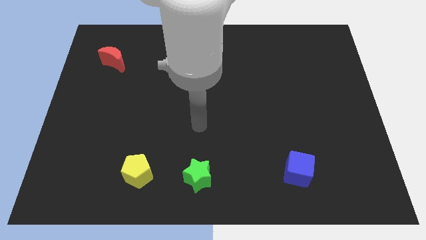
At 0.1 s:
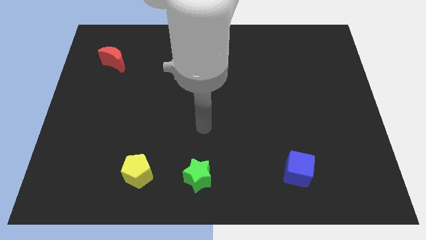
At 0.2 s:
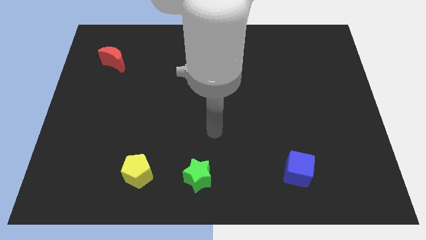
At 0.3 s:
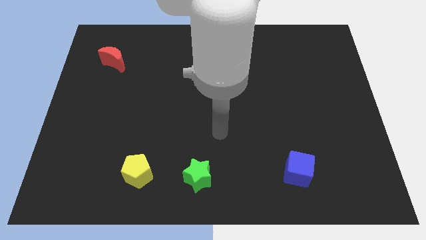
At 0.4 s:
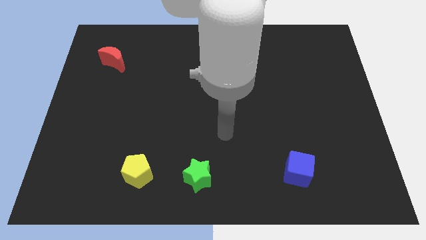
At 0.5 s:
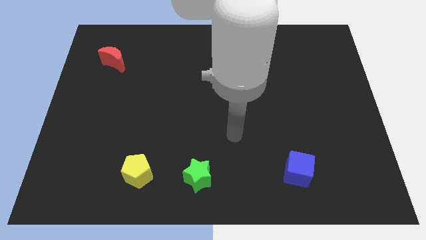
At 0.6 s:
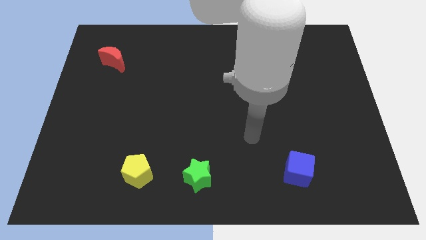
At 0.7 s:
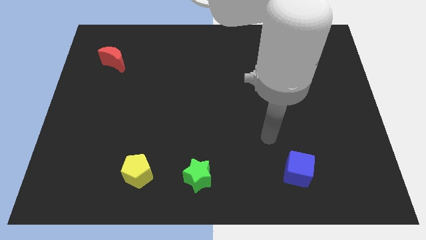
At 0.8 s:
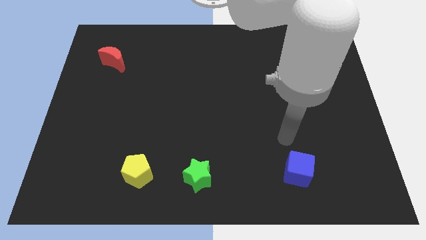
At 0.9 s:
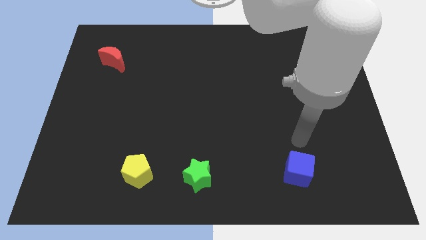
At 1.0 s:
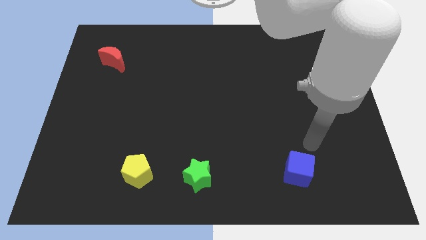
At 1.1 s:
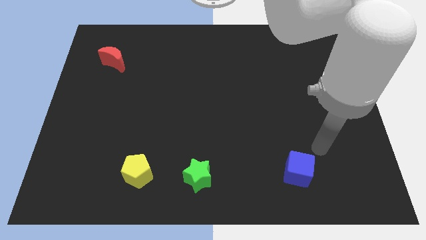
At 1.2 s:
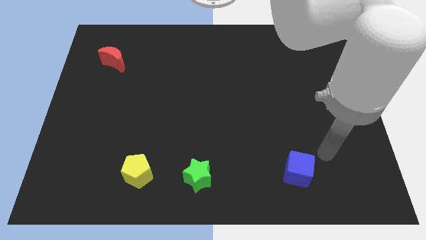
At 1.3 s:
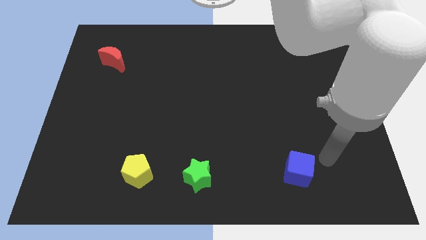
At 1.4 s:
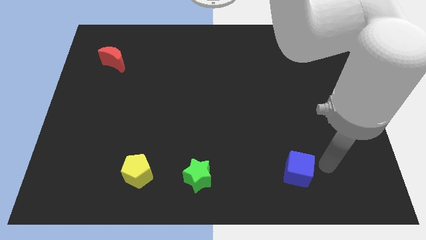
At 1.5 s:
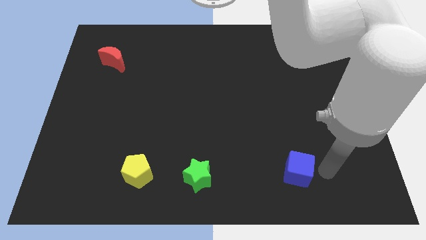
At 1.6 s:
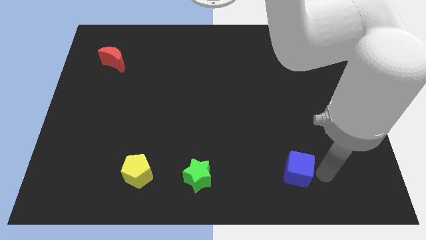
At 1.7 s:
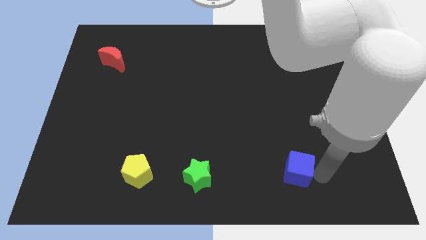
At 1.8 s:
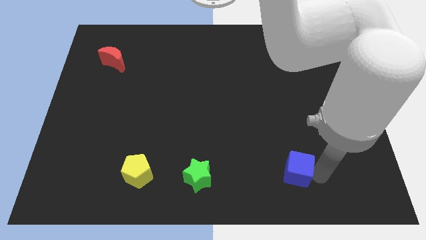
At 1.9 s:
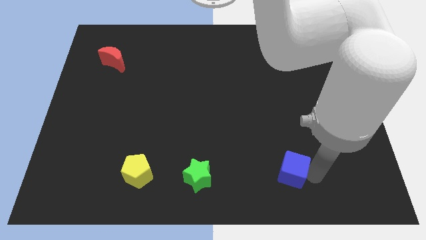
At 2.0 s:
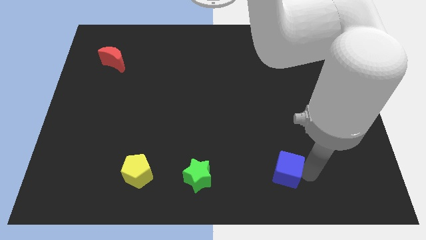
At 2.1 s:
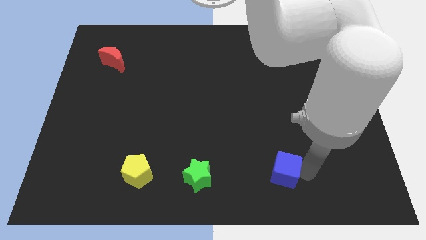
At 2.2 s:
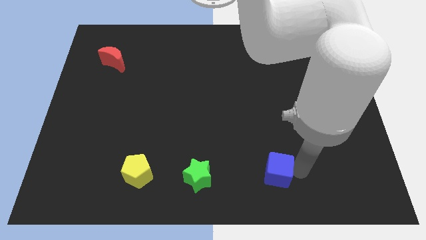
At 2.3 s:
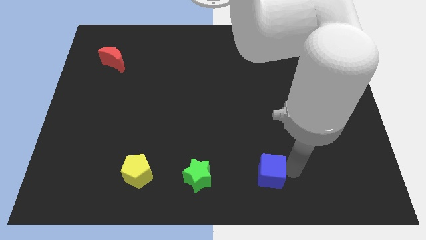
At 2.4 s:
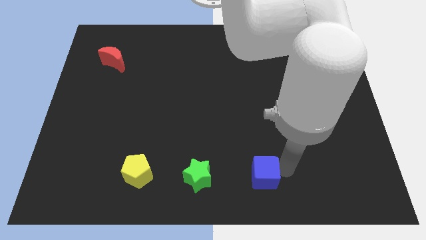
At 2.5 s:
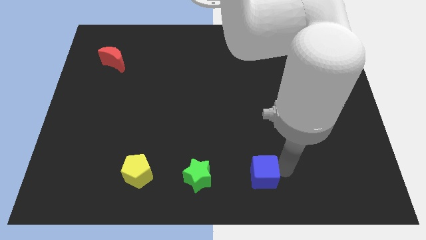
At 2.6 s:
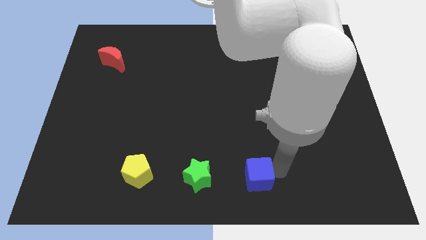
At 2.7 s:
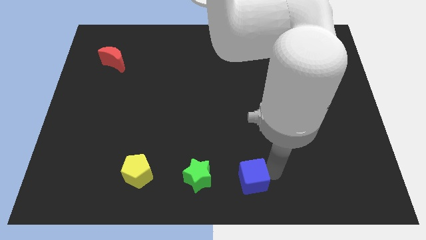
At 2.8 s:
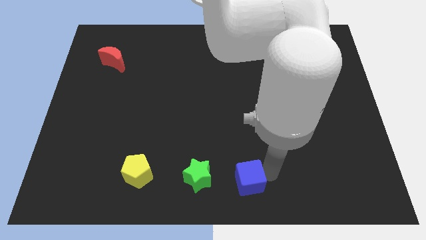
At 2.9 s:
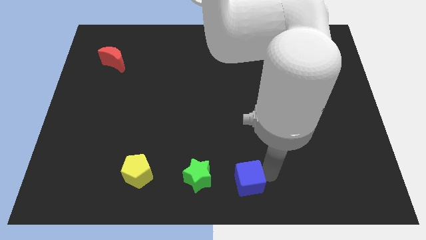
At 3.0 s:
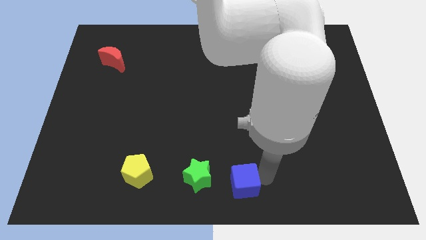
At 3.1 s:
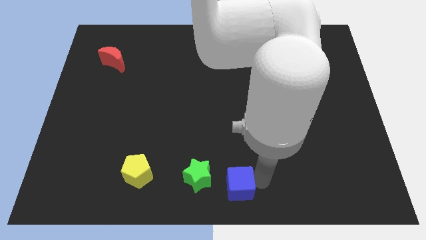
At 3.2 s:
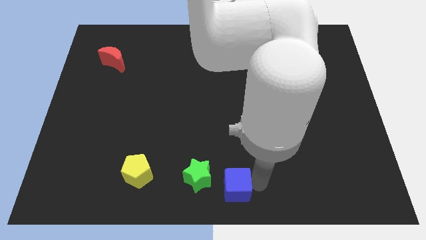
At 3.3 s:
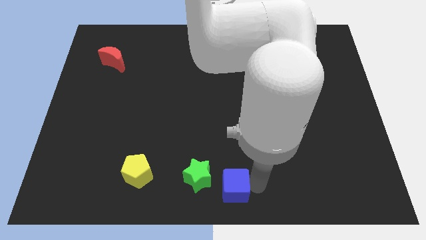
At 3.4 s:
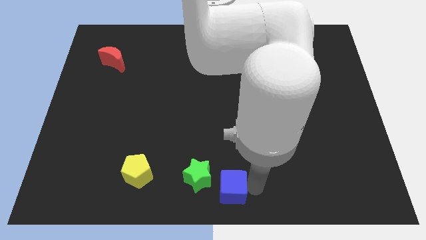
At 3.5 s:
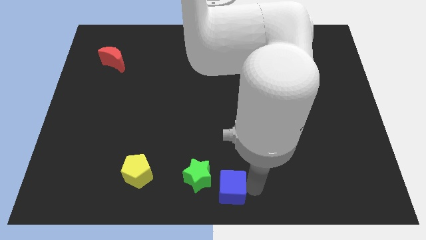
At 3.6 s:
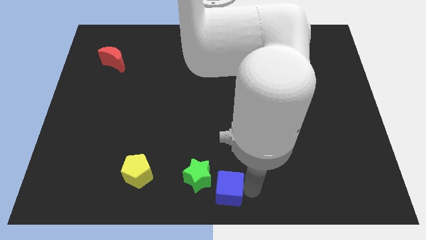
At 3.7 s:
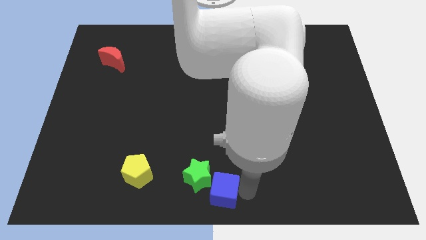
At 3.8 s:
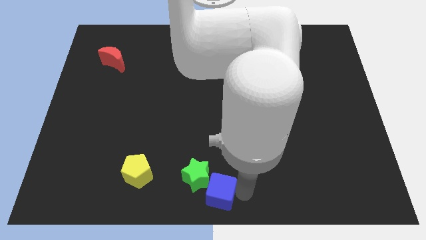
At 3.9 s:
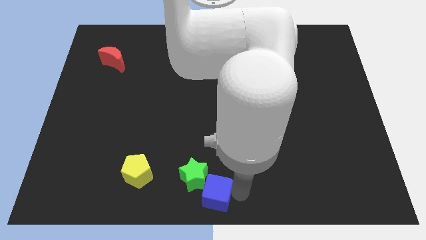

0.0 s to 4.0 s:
push the blue block next to the star

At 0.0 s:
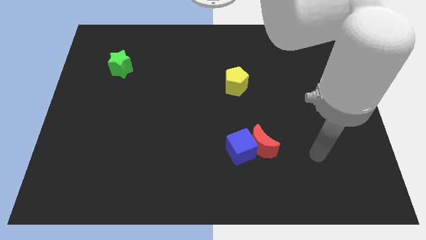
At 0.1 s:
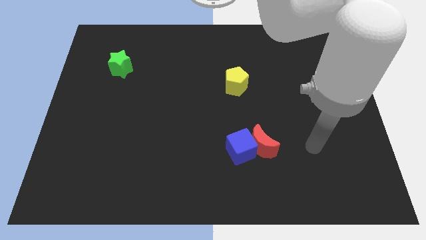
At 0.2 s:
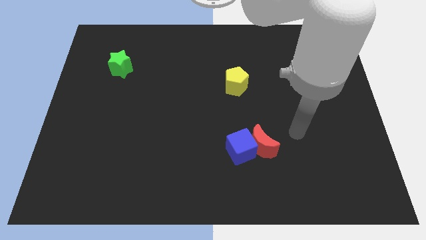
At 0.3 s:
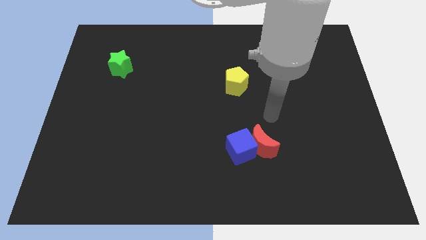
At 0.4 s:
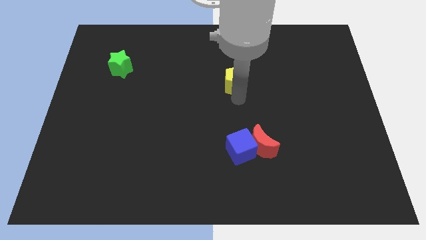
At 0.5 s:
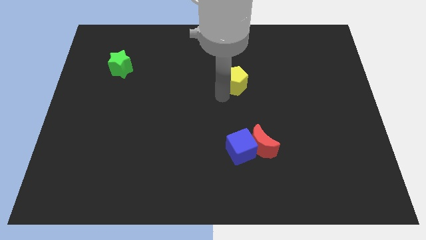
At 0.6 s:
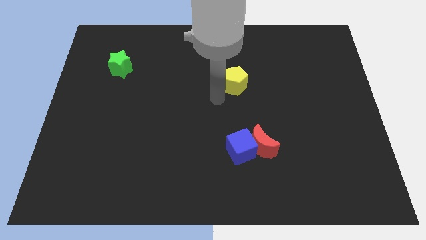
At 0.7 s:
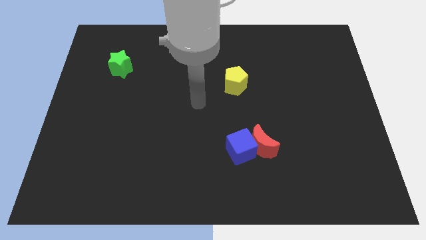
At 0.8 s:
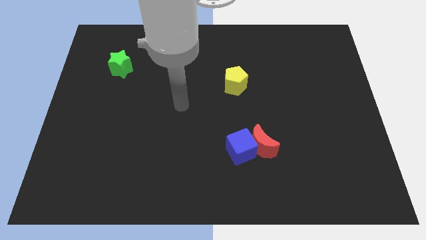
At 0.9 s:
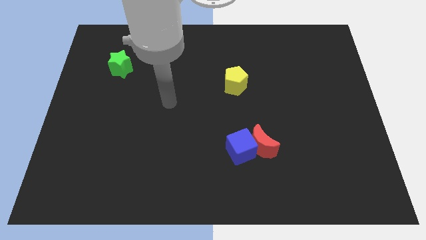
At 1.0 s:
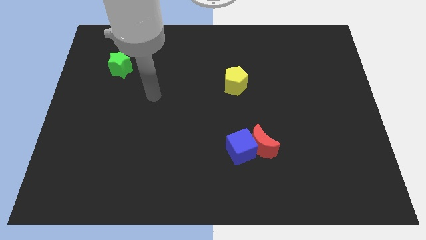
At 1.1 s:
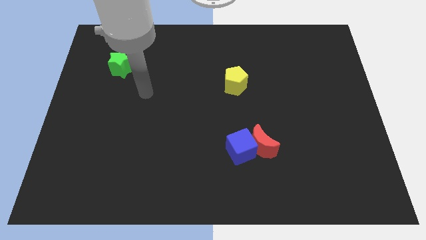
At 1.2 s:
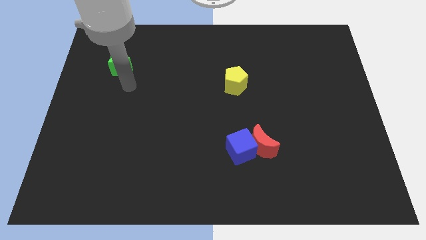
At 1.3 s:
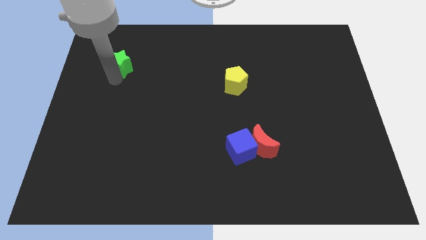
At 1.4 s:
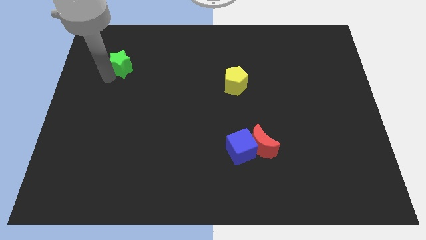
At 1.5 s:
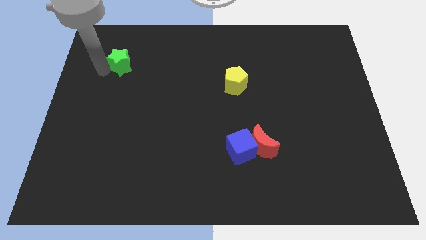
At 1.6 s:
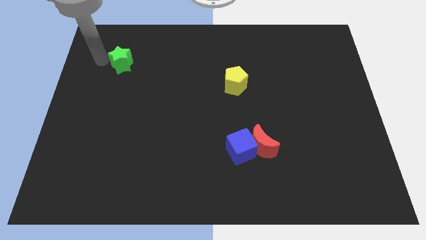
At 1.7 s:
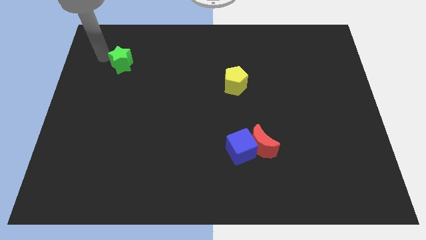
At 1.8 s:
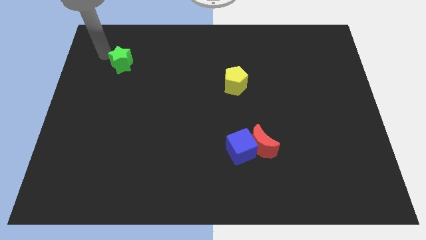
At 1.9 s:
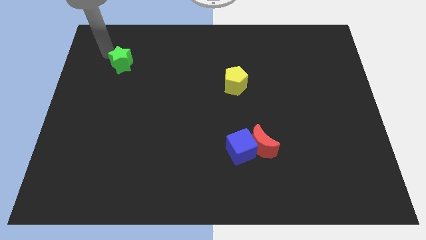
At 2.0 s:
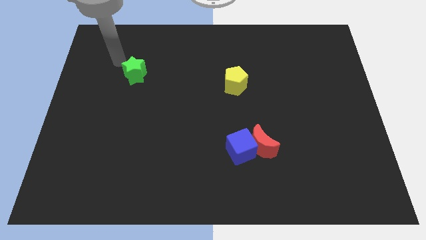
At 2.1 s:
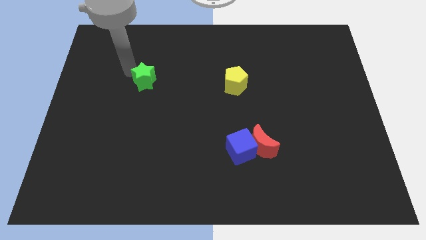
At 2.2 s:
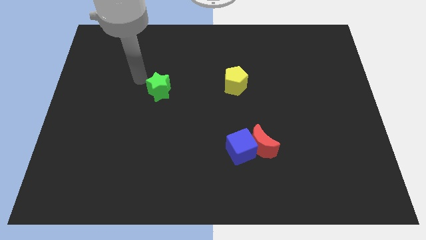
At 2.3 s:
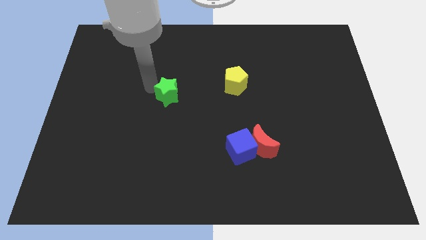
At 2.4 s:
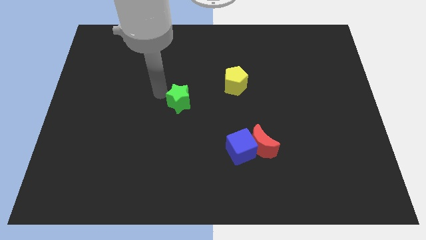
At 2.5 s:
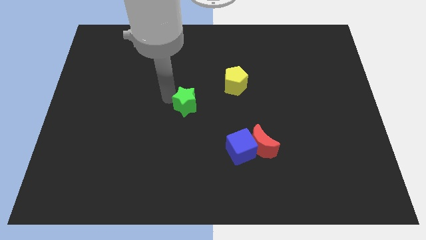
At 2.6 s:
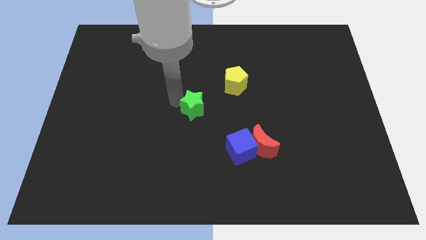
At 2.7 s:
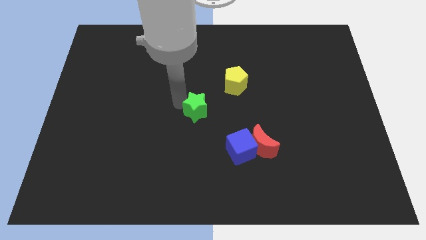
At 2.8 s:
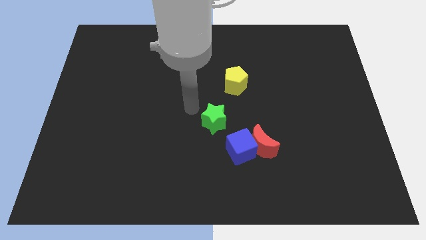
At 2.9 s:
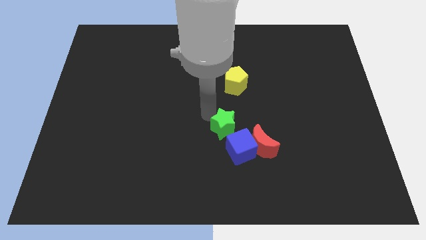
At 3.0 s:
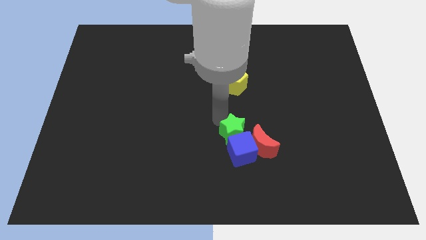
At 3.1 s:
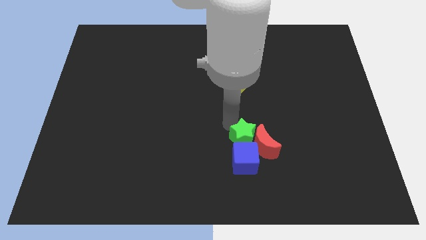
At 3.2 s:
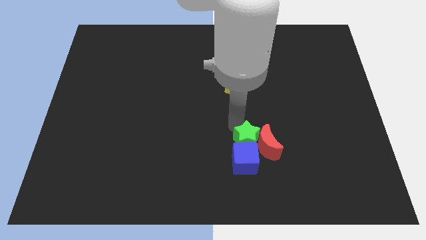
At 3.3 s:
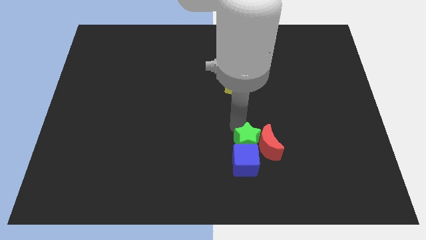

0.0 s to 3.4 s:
push the star close to the red moon

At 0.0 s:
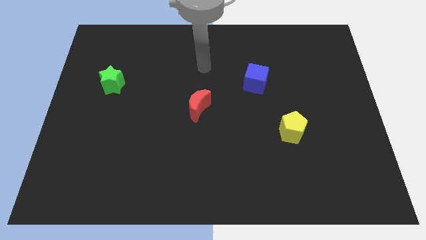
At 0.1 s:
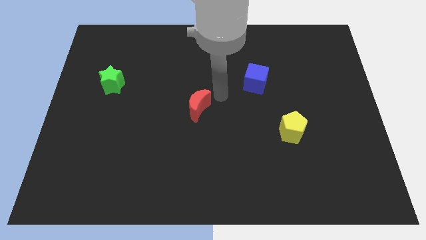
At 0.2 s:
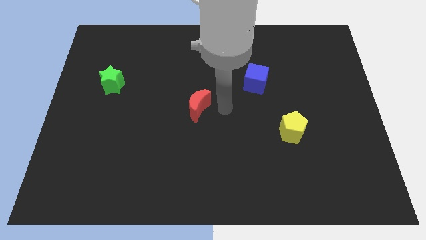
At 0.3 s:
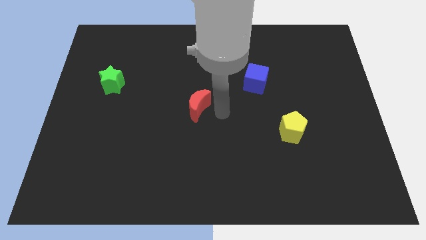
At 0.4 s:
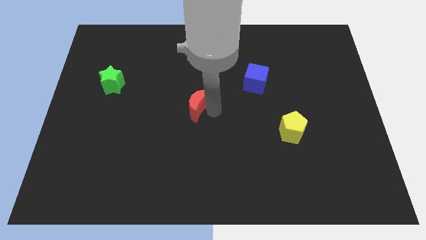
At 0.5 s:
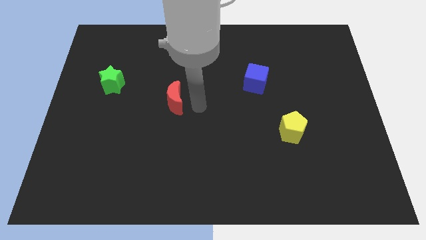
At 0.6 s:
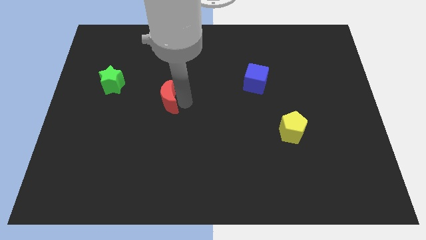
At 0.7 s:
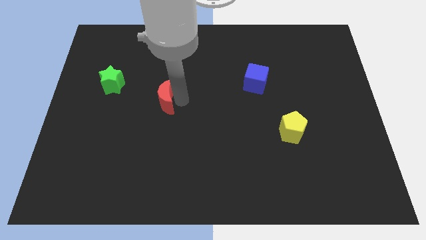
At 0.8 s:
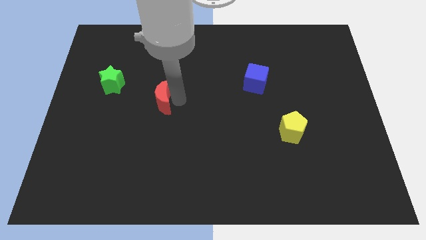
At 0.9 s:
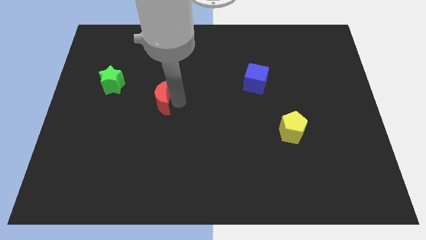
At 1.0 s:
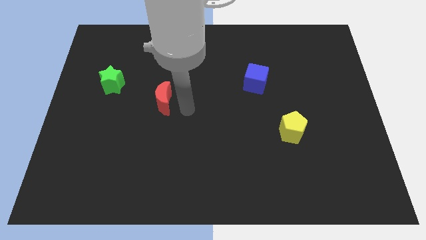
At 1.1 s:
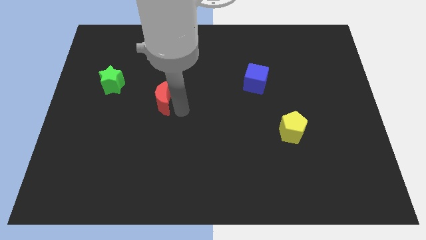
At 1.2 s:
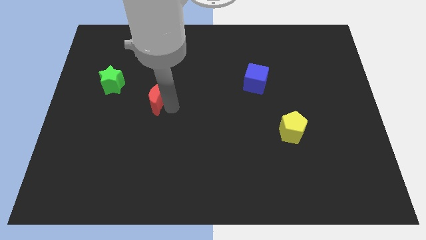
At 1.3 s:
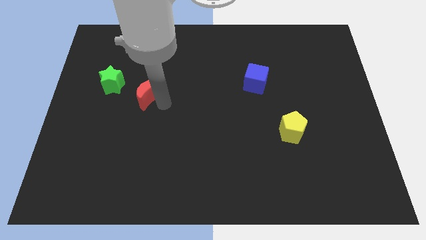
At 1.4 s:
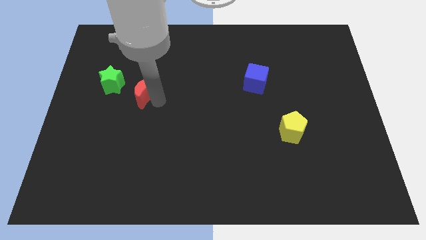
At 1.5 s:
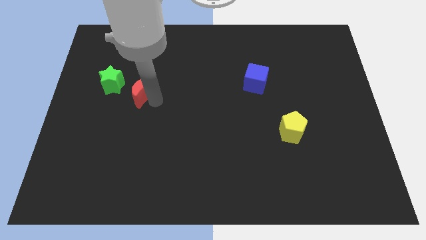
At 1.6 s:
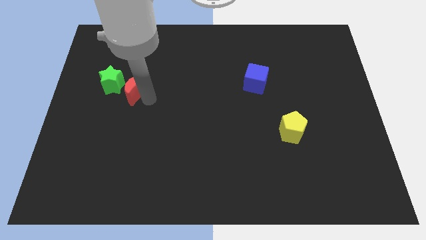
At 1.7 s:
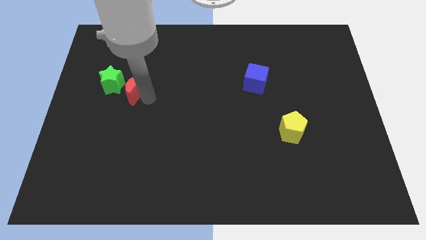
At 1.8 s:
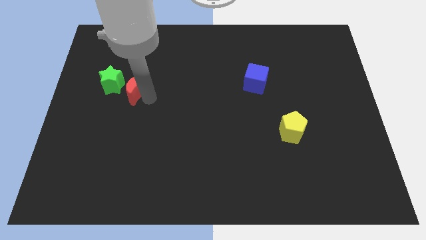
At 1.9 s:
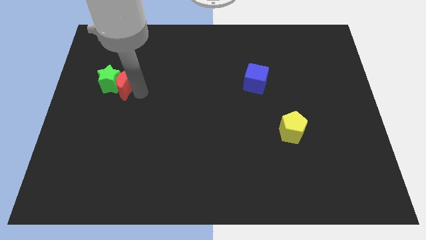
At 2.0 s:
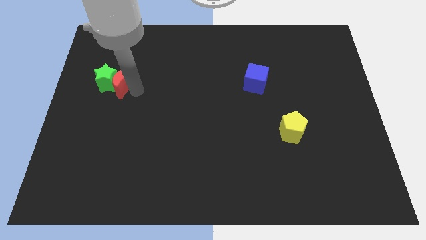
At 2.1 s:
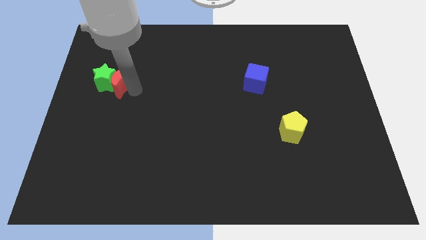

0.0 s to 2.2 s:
put the moon next to the green block
